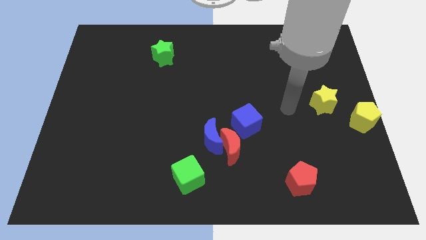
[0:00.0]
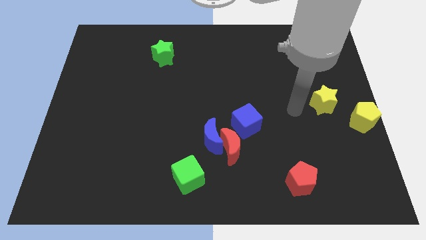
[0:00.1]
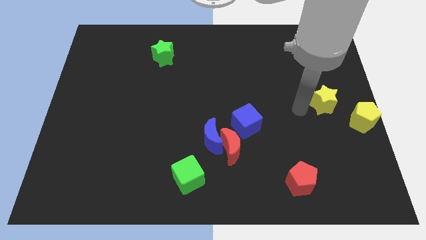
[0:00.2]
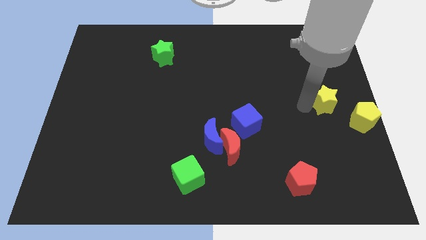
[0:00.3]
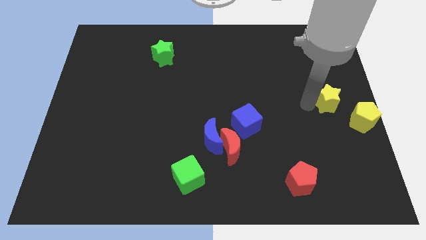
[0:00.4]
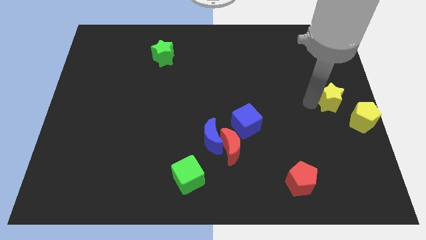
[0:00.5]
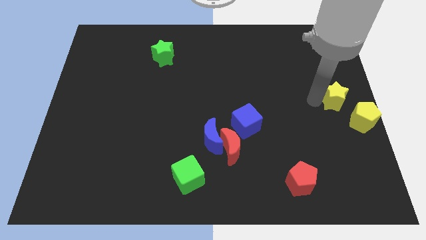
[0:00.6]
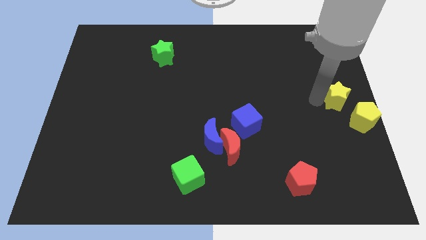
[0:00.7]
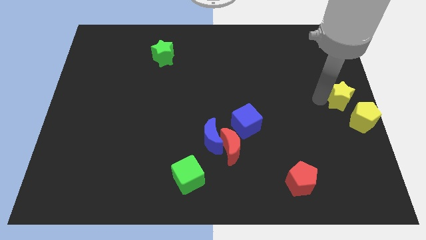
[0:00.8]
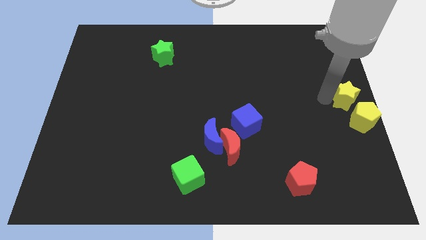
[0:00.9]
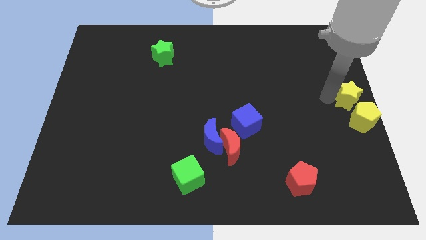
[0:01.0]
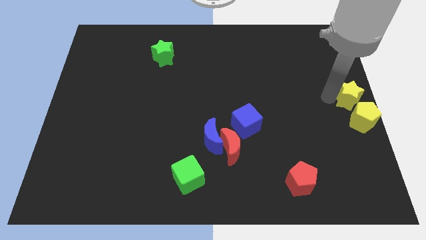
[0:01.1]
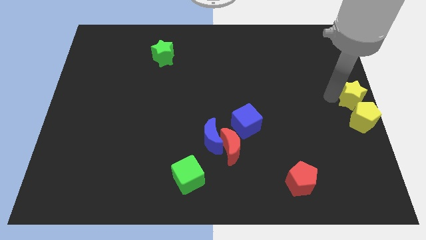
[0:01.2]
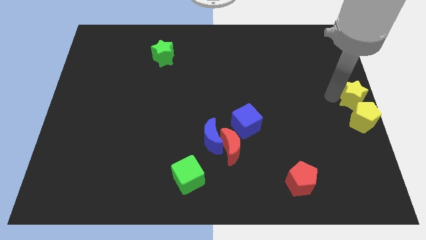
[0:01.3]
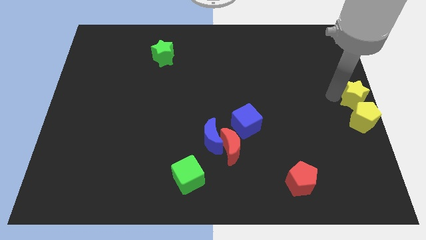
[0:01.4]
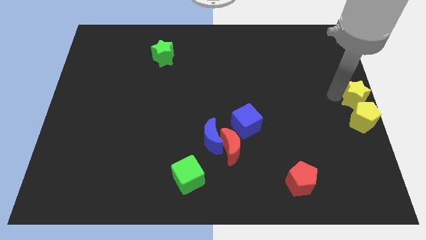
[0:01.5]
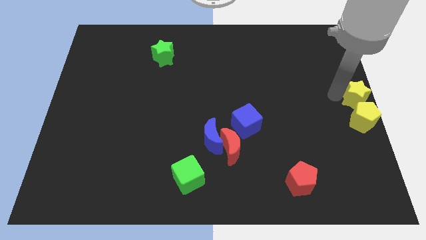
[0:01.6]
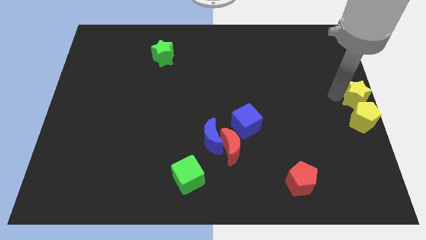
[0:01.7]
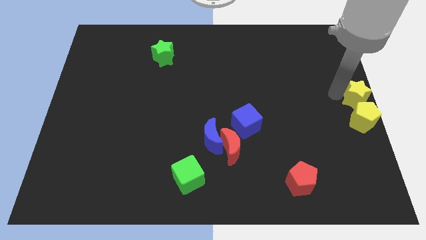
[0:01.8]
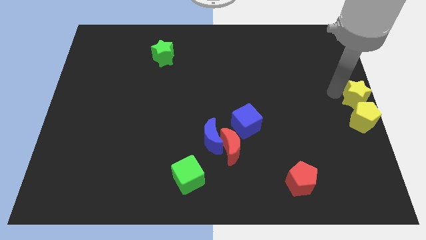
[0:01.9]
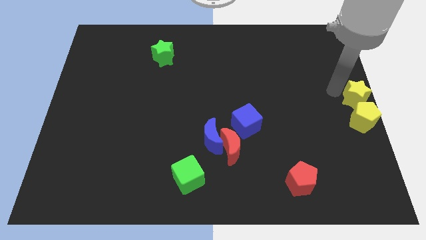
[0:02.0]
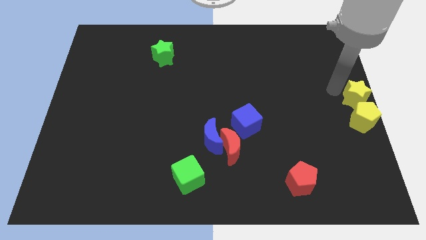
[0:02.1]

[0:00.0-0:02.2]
place yellow star above yellow pentagon

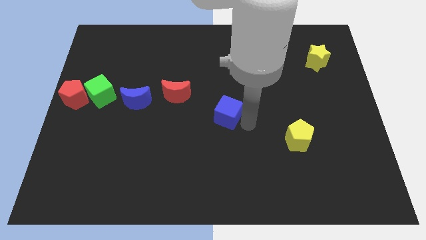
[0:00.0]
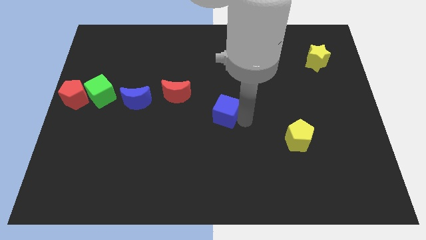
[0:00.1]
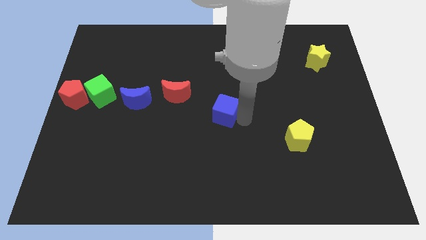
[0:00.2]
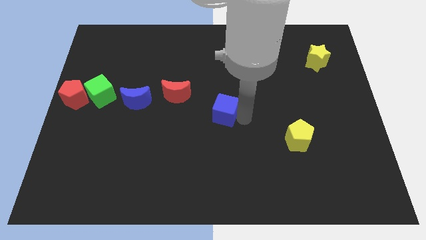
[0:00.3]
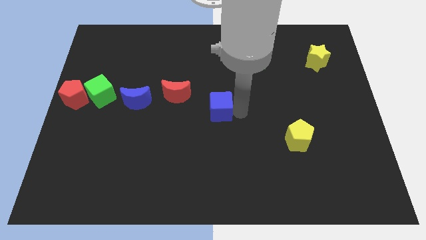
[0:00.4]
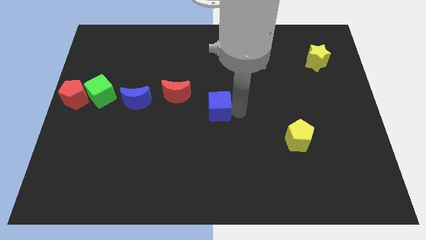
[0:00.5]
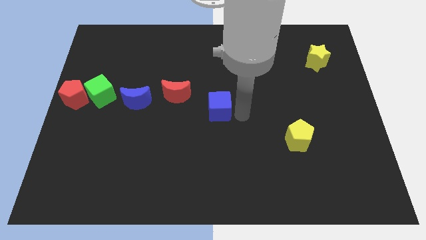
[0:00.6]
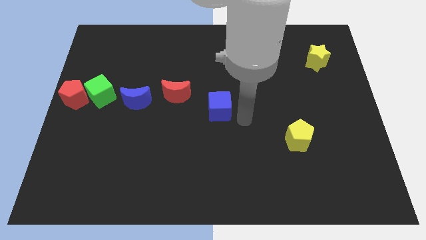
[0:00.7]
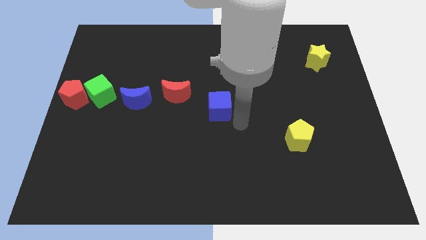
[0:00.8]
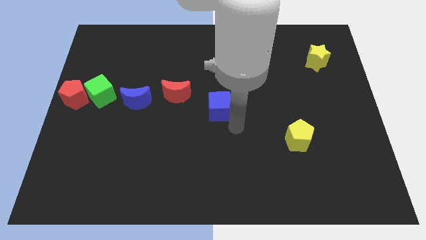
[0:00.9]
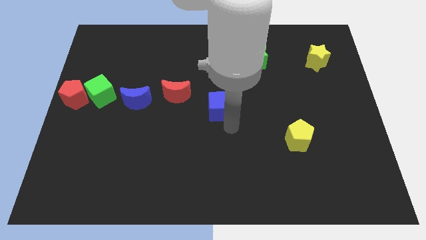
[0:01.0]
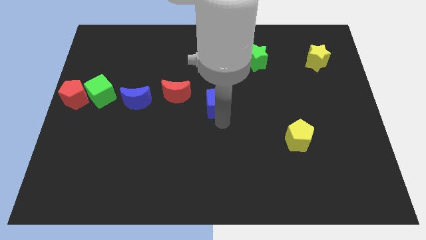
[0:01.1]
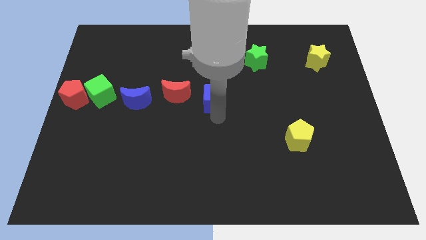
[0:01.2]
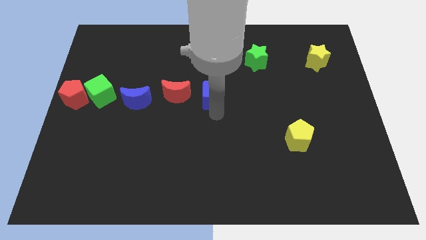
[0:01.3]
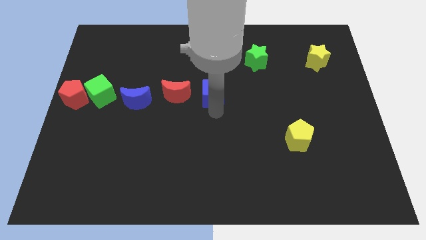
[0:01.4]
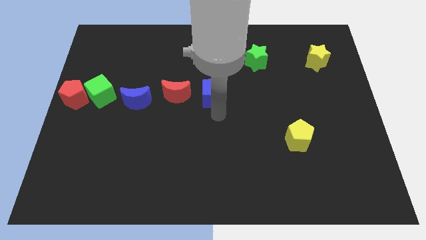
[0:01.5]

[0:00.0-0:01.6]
place blue cube beside red crescent

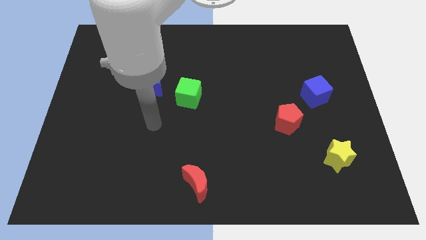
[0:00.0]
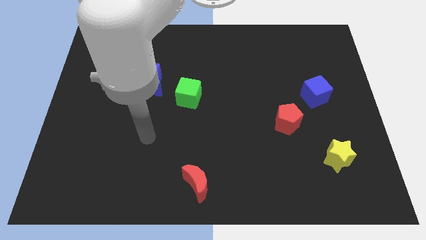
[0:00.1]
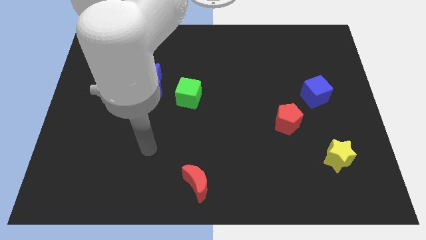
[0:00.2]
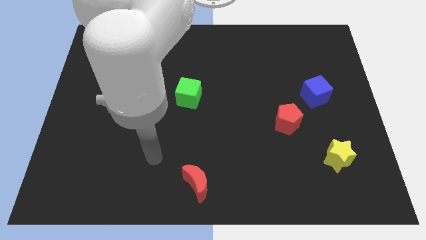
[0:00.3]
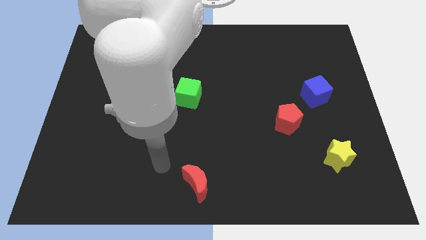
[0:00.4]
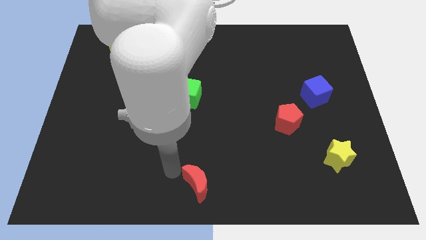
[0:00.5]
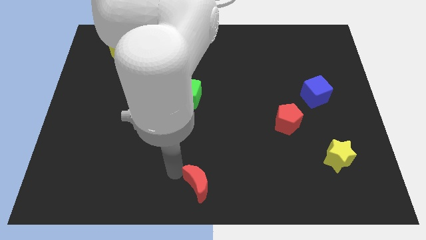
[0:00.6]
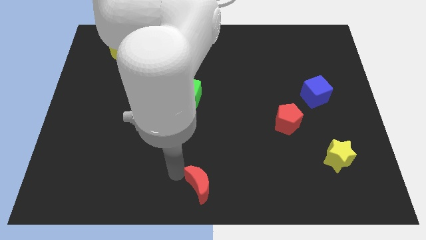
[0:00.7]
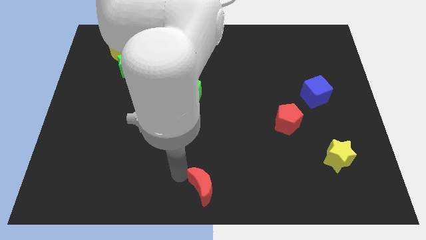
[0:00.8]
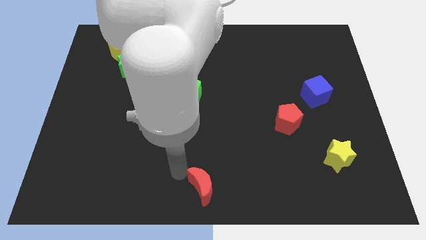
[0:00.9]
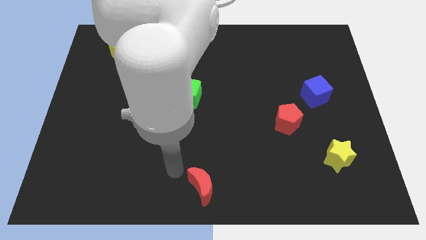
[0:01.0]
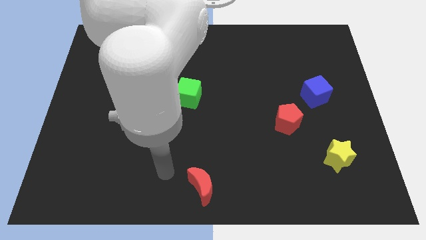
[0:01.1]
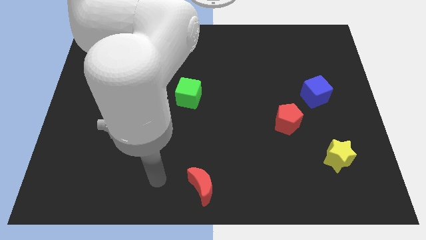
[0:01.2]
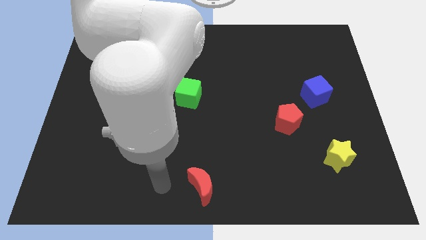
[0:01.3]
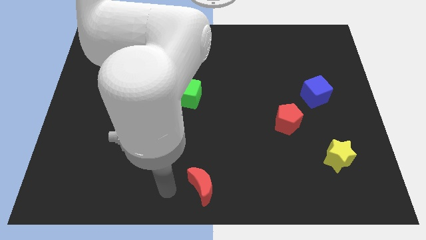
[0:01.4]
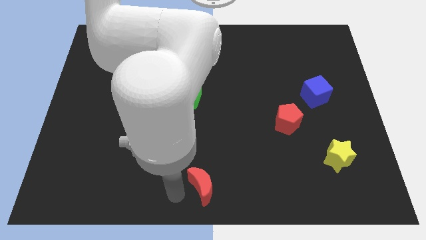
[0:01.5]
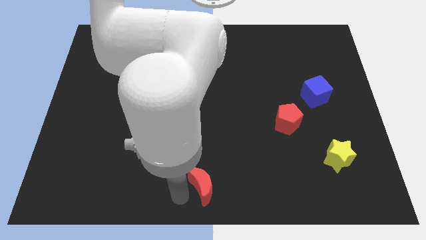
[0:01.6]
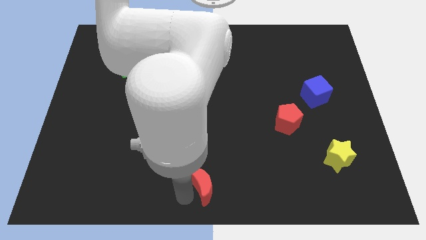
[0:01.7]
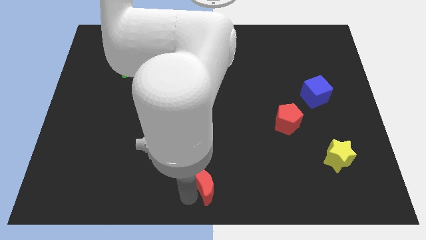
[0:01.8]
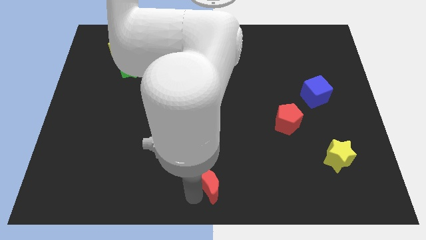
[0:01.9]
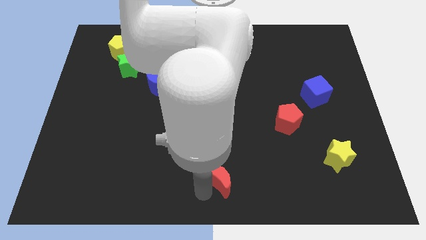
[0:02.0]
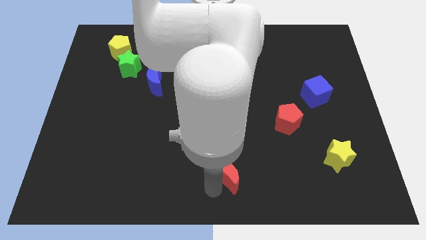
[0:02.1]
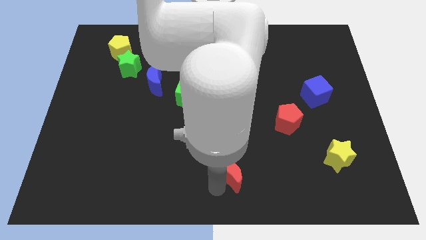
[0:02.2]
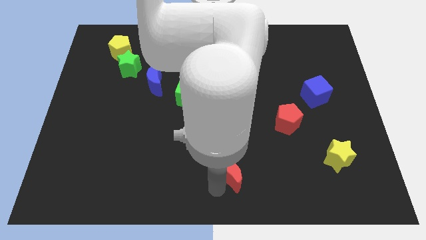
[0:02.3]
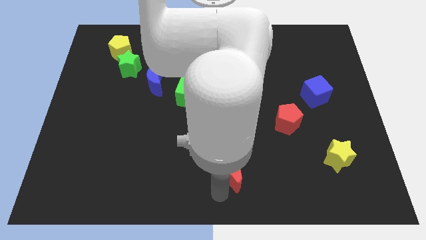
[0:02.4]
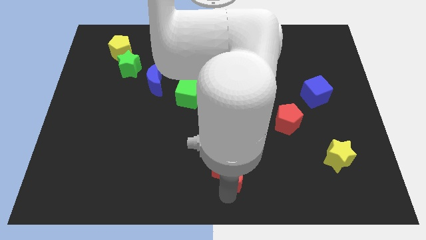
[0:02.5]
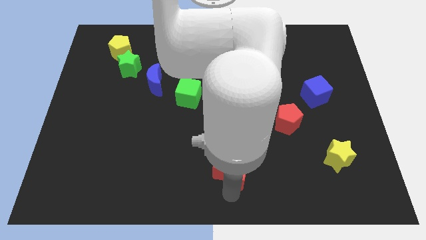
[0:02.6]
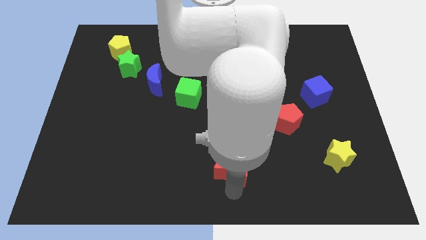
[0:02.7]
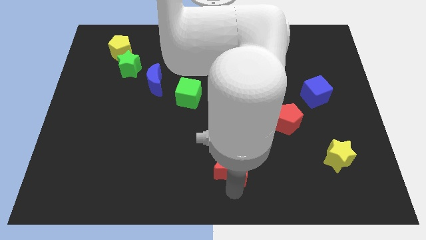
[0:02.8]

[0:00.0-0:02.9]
move the red moon up slightly

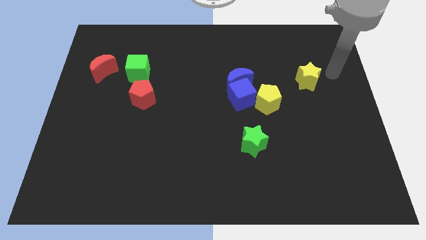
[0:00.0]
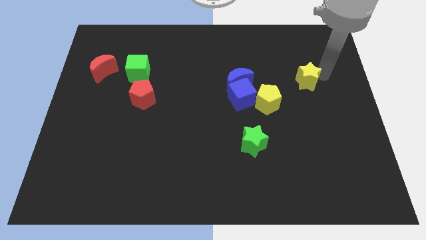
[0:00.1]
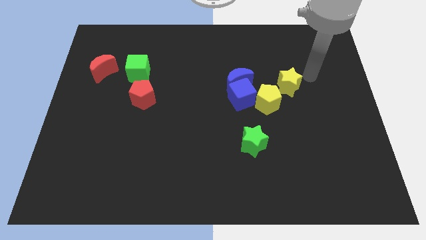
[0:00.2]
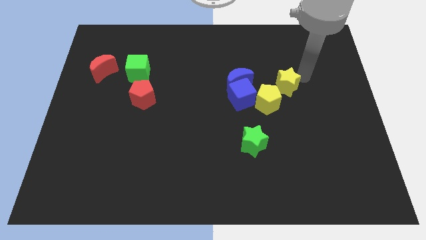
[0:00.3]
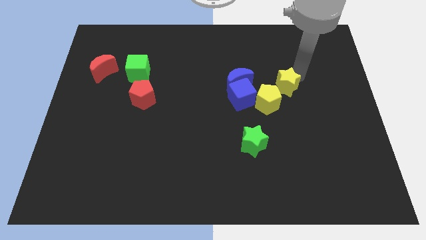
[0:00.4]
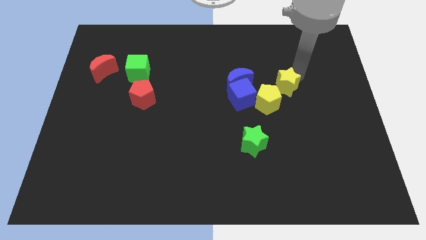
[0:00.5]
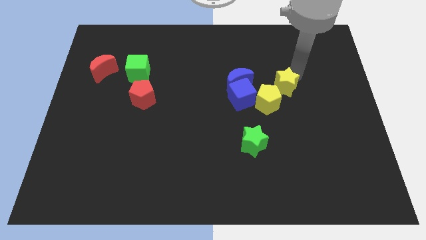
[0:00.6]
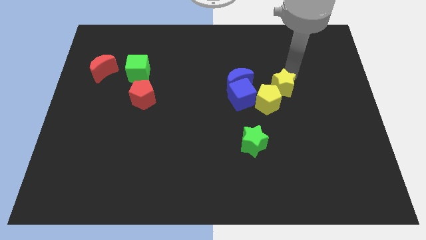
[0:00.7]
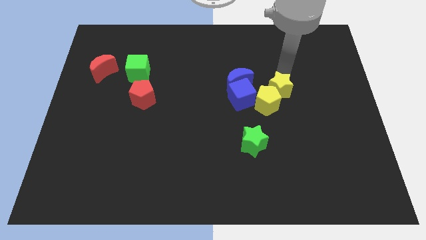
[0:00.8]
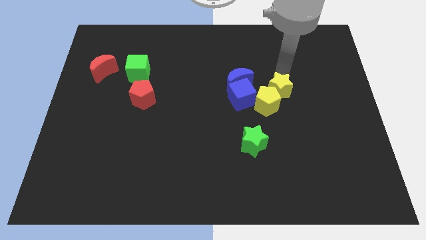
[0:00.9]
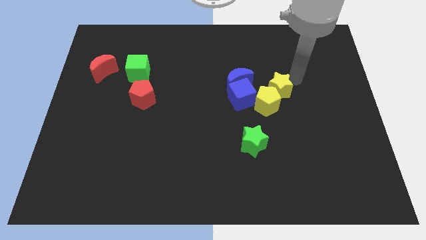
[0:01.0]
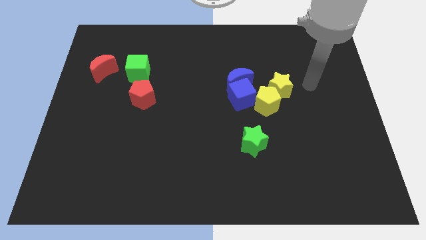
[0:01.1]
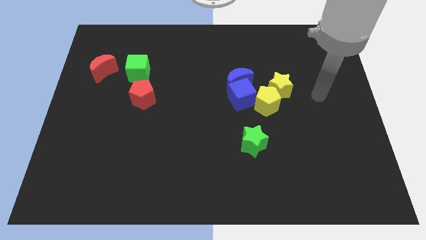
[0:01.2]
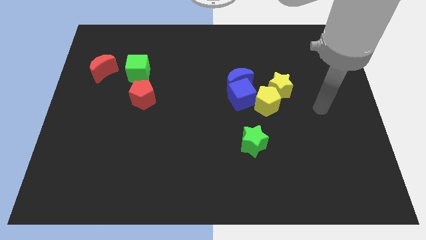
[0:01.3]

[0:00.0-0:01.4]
slightly move the yellow star into the yellow pentagon

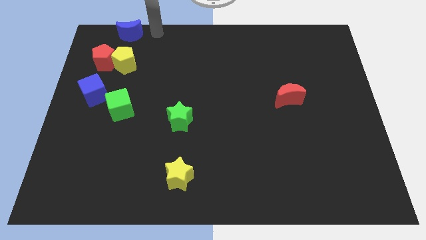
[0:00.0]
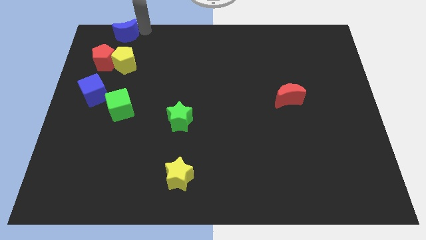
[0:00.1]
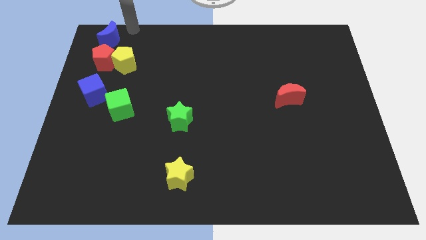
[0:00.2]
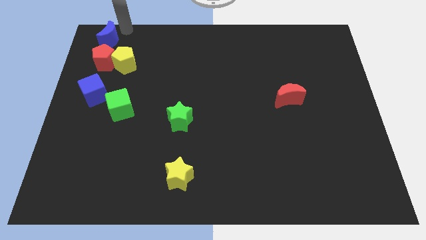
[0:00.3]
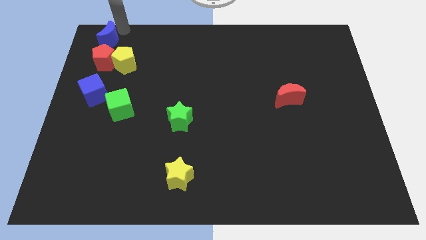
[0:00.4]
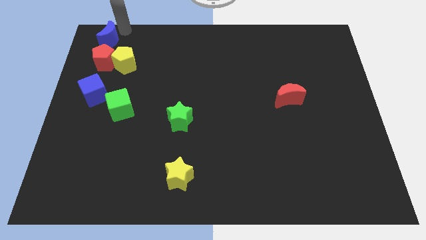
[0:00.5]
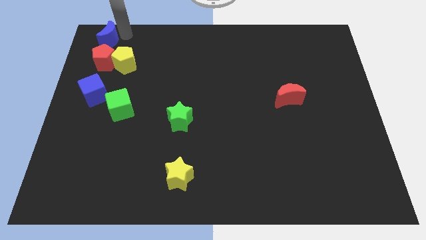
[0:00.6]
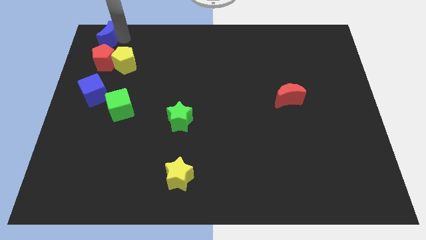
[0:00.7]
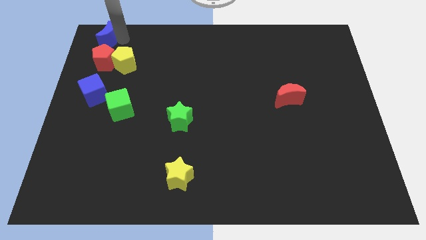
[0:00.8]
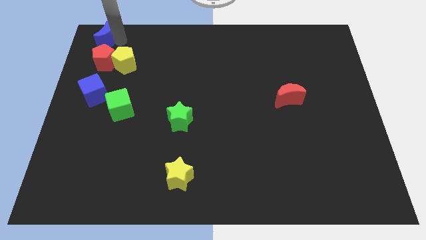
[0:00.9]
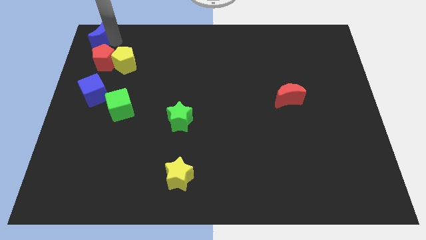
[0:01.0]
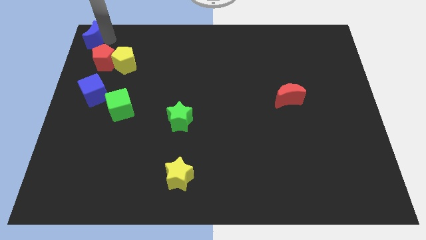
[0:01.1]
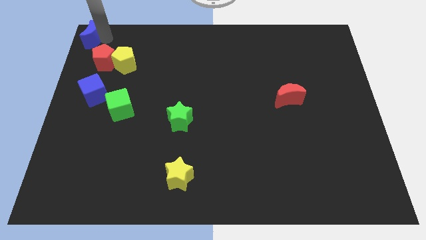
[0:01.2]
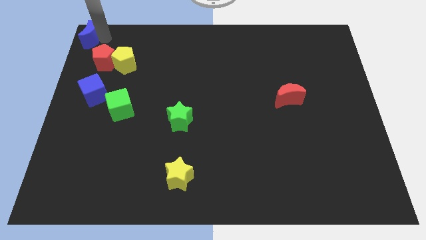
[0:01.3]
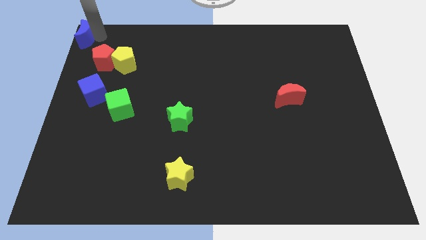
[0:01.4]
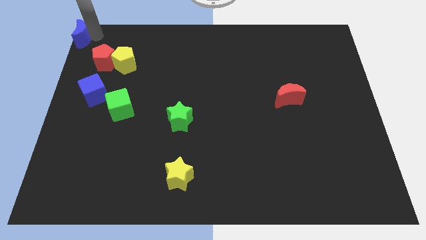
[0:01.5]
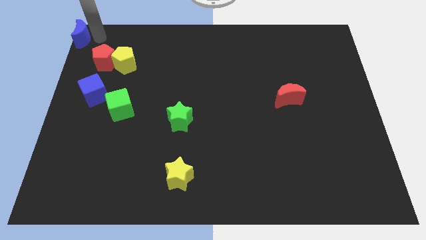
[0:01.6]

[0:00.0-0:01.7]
move the blue moon to the top left corner of the board
